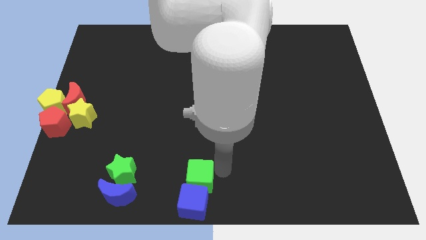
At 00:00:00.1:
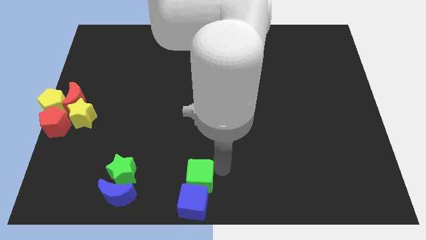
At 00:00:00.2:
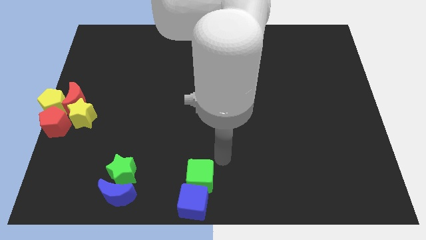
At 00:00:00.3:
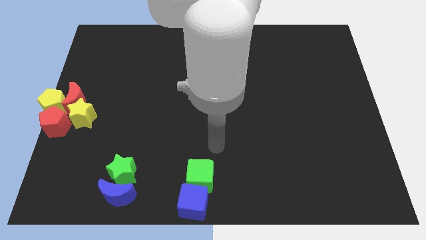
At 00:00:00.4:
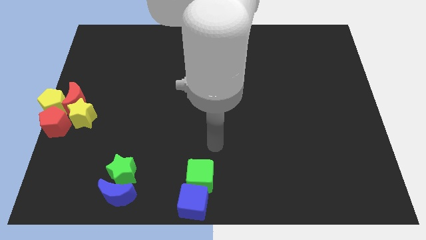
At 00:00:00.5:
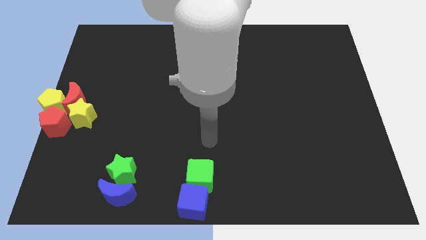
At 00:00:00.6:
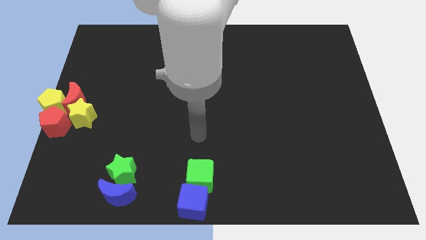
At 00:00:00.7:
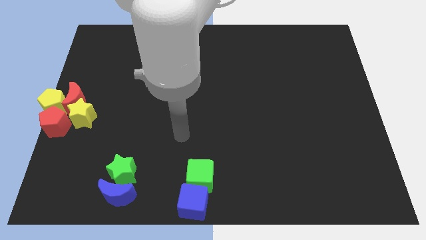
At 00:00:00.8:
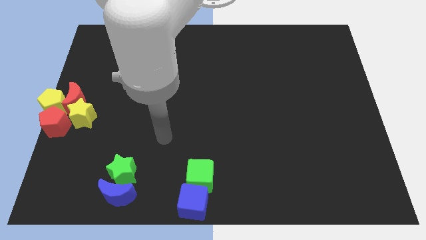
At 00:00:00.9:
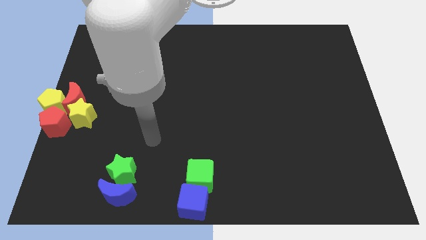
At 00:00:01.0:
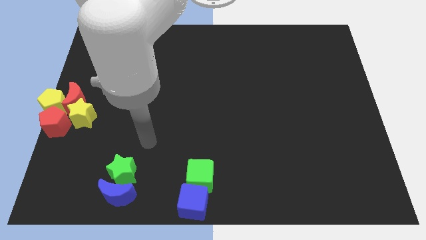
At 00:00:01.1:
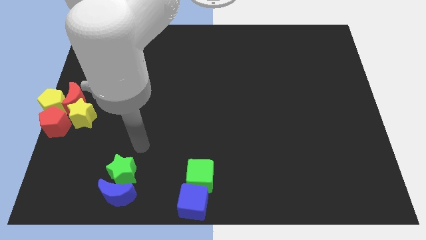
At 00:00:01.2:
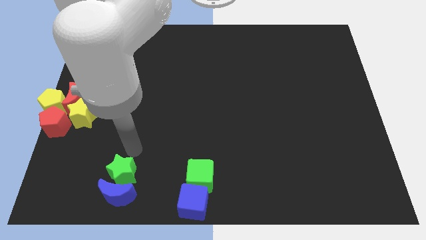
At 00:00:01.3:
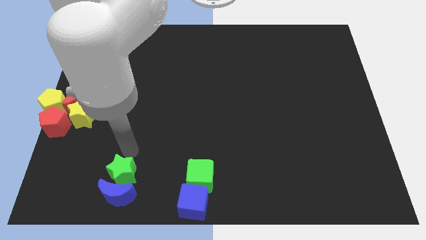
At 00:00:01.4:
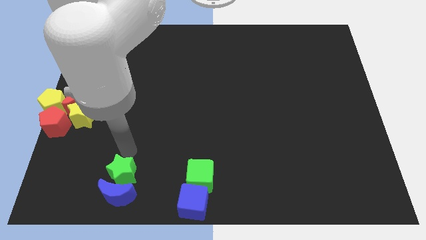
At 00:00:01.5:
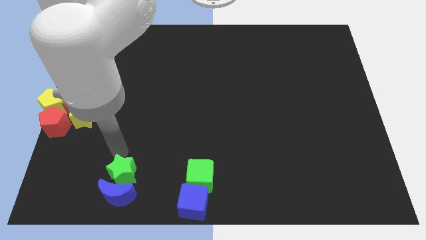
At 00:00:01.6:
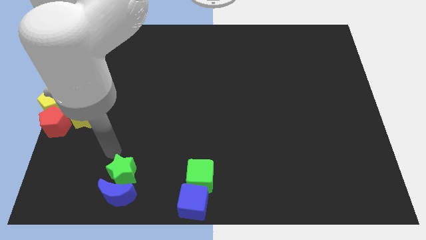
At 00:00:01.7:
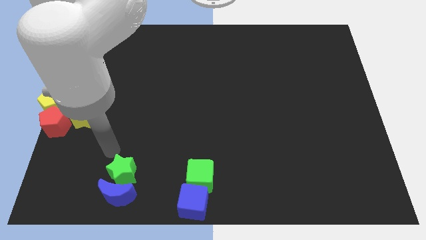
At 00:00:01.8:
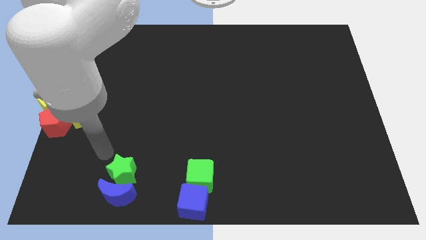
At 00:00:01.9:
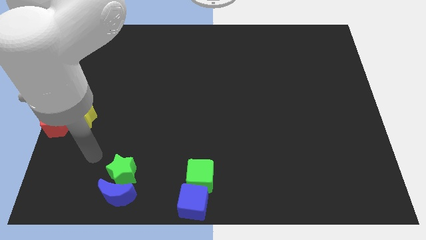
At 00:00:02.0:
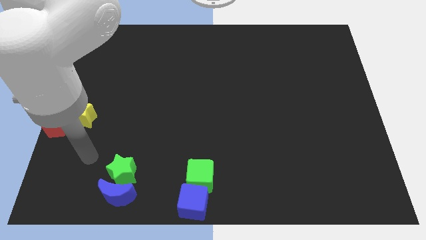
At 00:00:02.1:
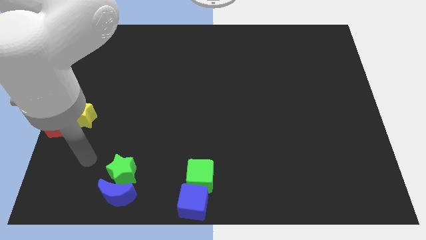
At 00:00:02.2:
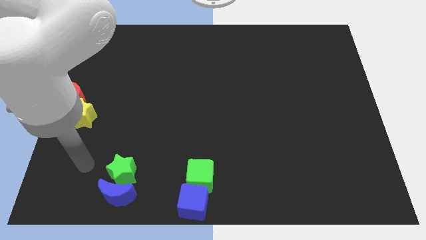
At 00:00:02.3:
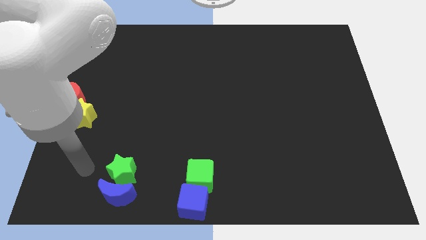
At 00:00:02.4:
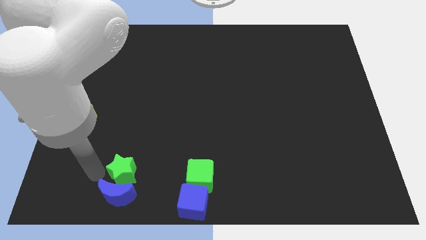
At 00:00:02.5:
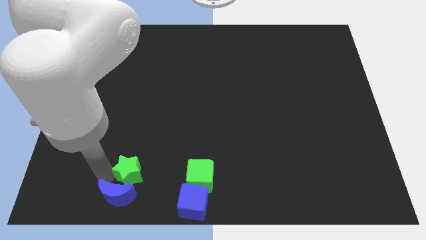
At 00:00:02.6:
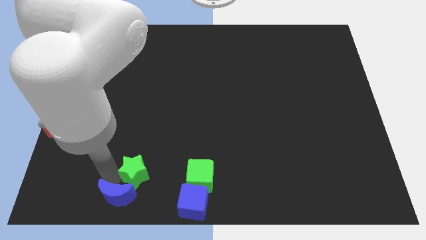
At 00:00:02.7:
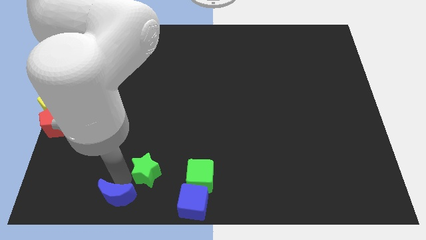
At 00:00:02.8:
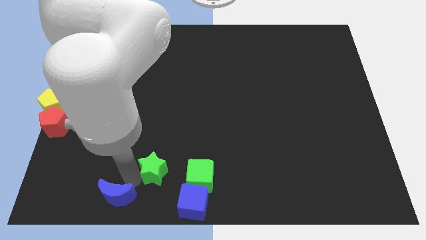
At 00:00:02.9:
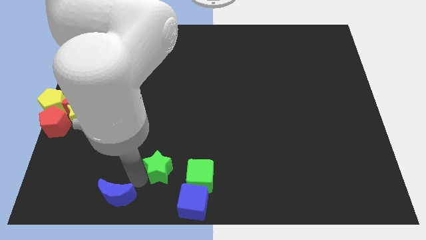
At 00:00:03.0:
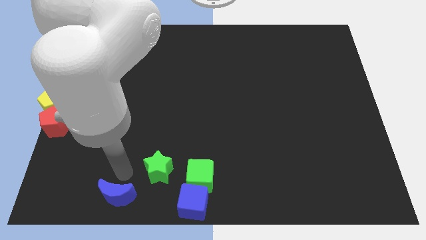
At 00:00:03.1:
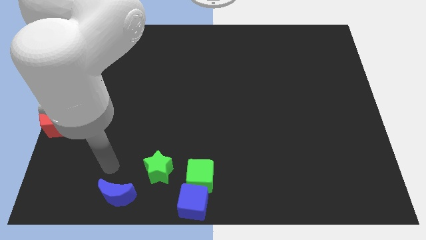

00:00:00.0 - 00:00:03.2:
place the green star at the left side of the green cube

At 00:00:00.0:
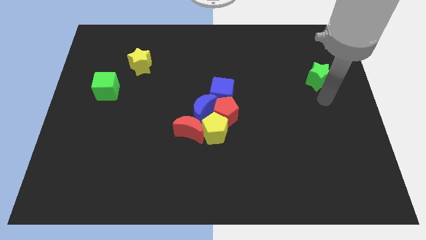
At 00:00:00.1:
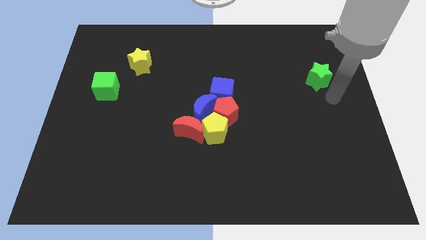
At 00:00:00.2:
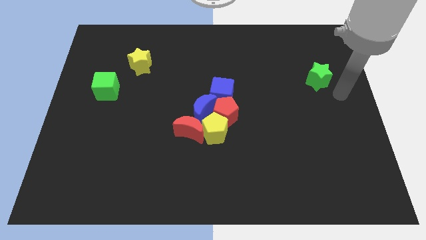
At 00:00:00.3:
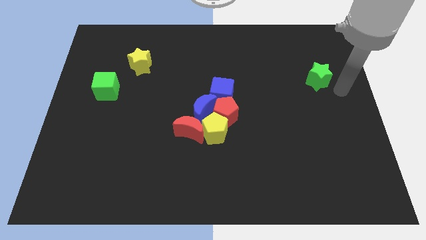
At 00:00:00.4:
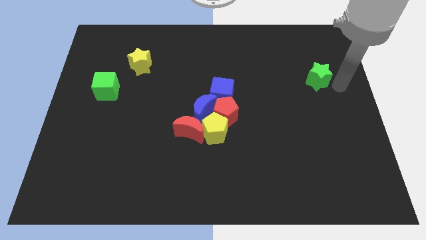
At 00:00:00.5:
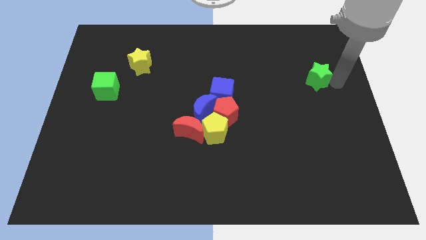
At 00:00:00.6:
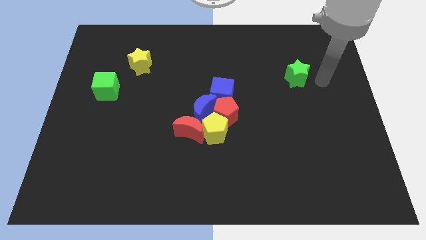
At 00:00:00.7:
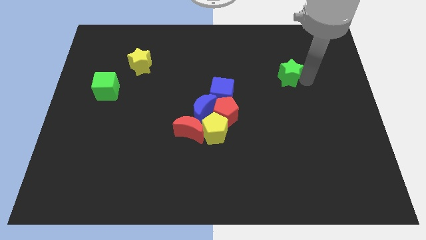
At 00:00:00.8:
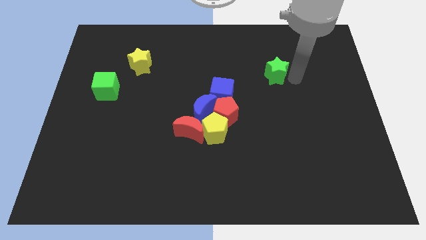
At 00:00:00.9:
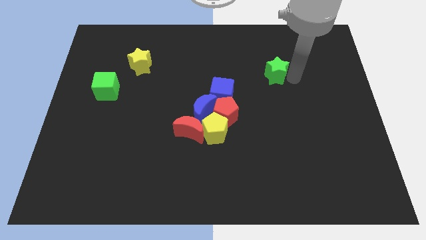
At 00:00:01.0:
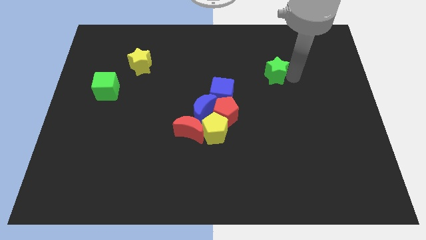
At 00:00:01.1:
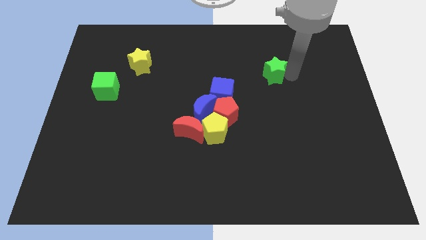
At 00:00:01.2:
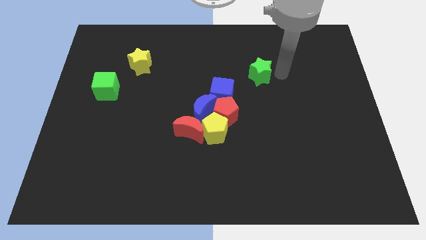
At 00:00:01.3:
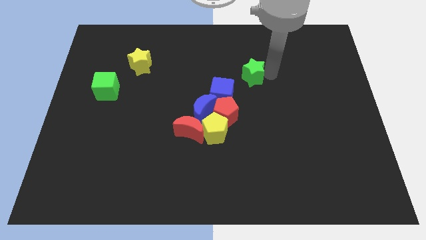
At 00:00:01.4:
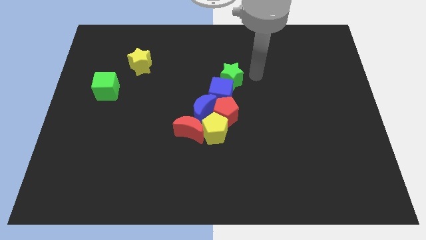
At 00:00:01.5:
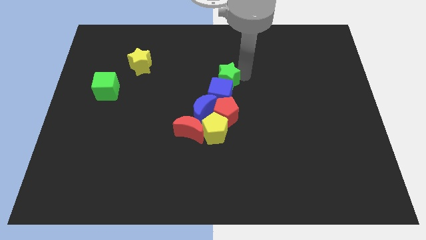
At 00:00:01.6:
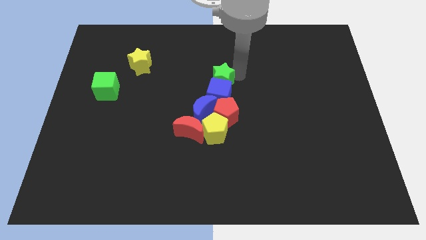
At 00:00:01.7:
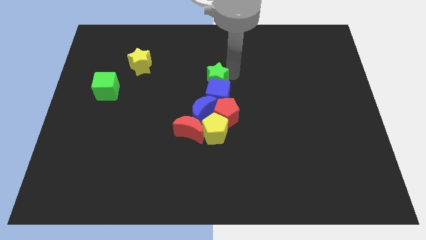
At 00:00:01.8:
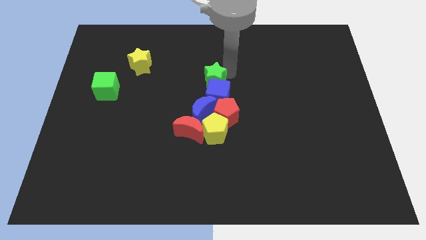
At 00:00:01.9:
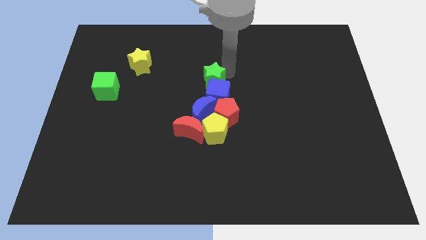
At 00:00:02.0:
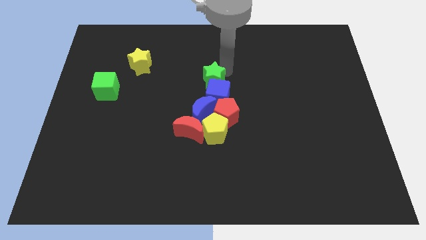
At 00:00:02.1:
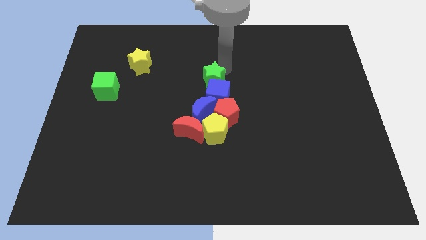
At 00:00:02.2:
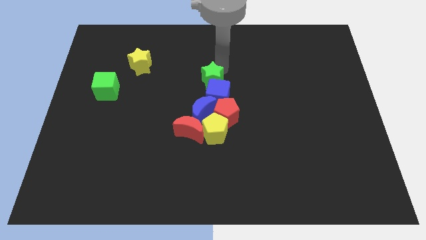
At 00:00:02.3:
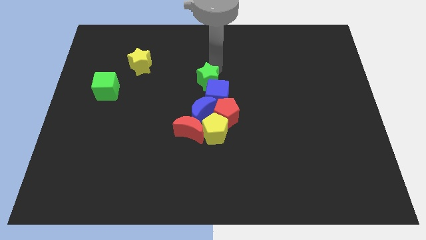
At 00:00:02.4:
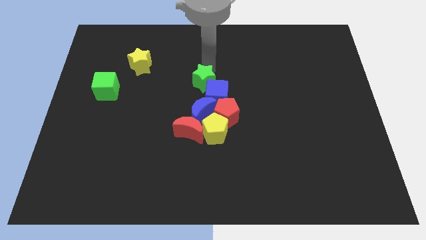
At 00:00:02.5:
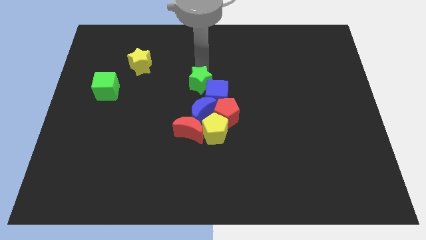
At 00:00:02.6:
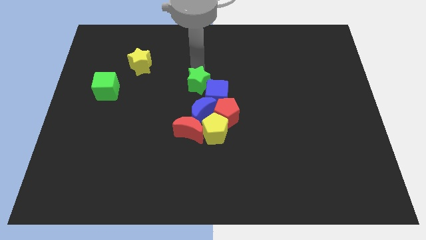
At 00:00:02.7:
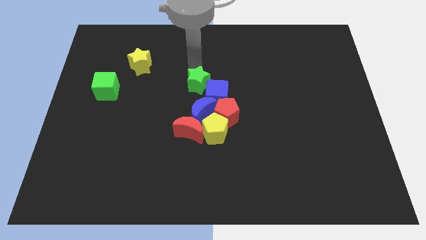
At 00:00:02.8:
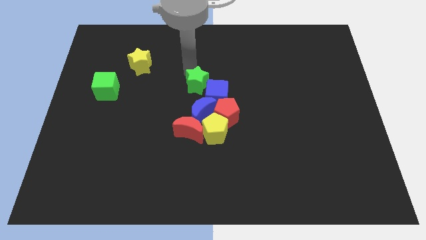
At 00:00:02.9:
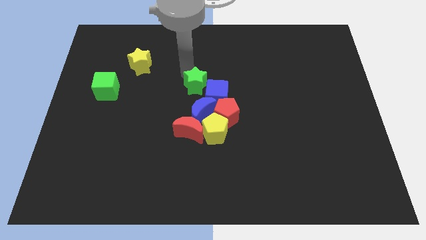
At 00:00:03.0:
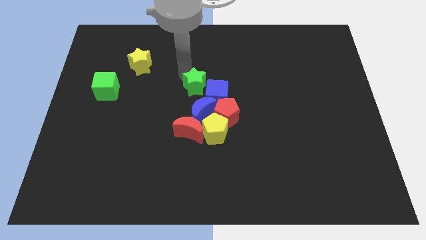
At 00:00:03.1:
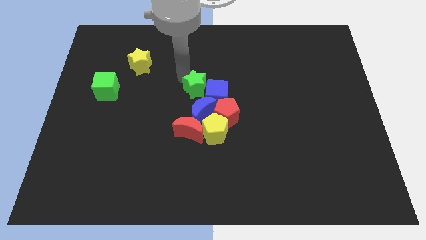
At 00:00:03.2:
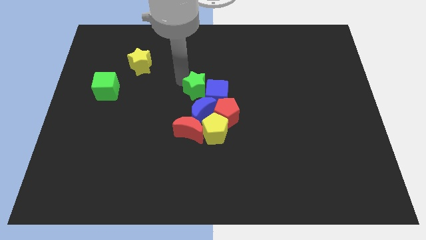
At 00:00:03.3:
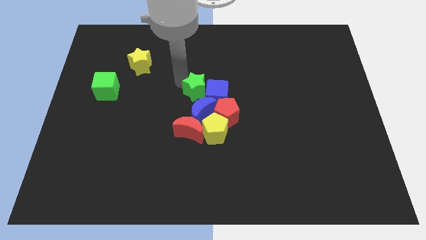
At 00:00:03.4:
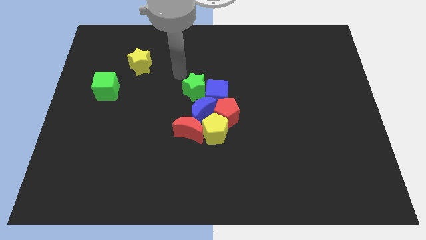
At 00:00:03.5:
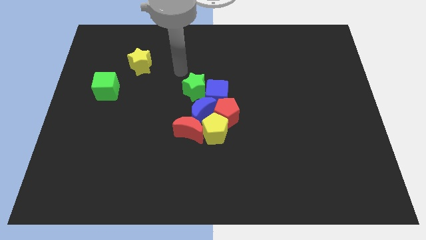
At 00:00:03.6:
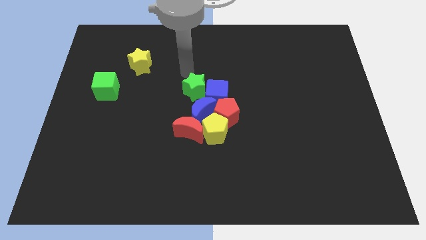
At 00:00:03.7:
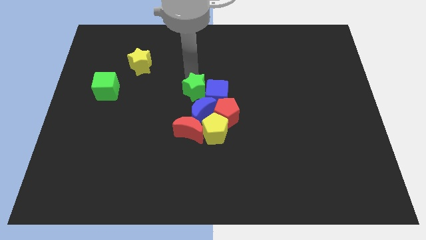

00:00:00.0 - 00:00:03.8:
move green star left beside the blue cube

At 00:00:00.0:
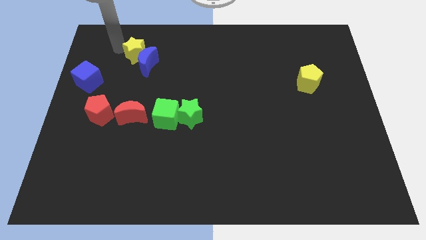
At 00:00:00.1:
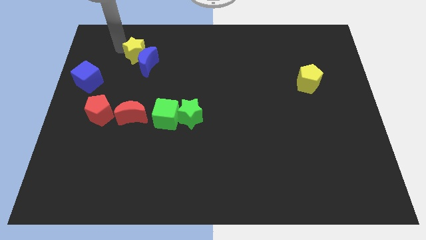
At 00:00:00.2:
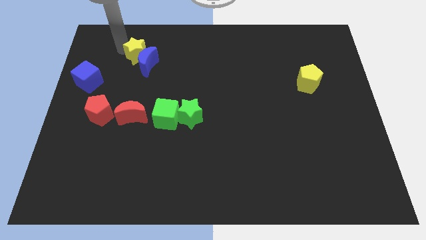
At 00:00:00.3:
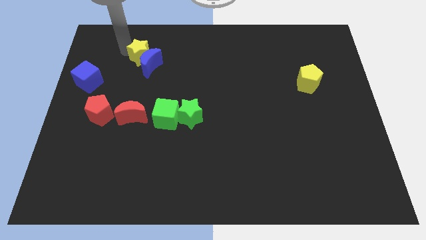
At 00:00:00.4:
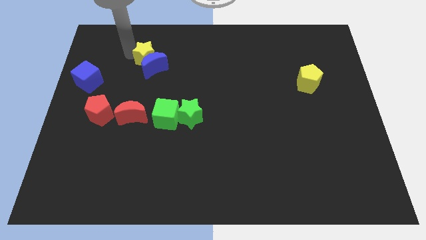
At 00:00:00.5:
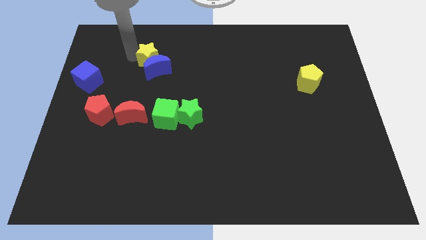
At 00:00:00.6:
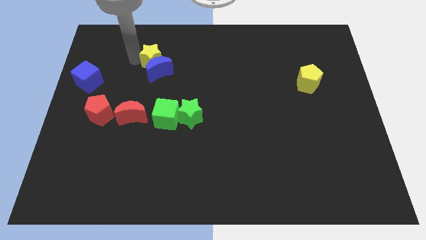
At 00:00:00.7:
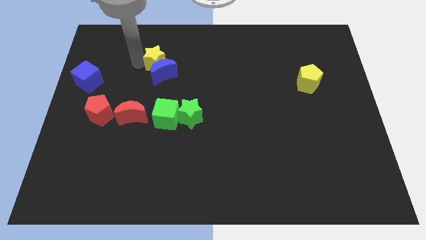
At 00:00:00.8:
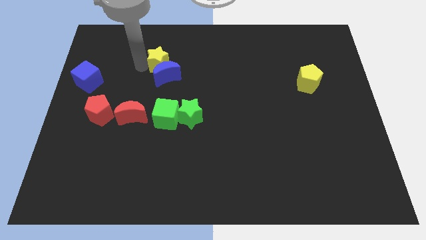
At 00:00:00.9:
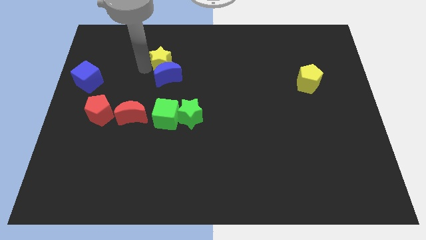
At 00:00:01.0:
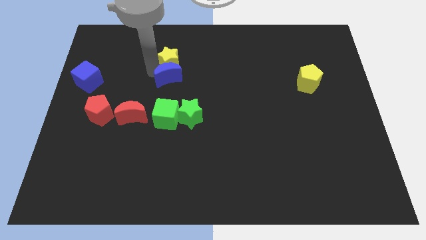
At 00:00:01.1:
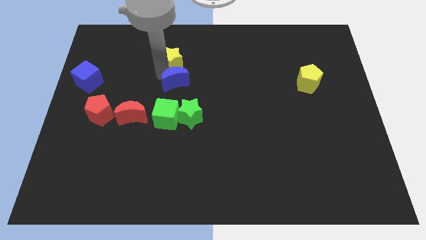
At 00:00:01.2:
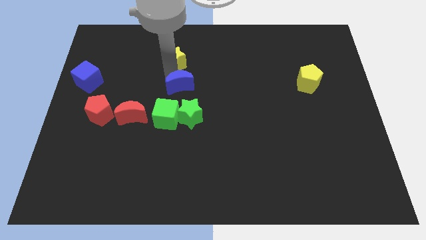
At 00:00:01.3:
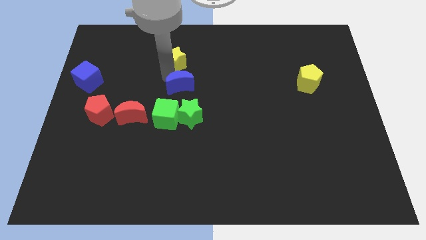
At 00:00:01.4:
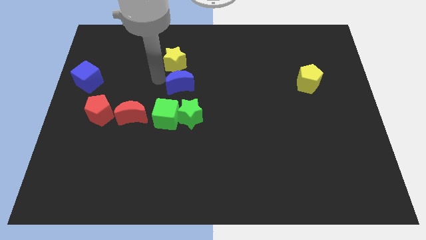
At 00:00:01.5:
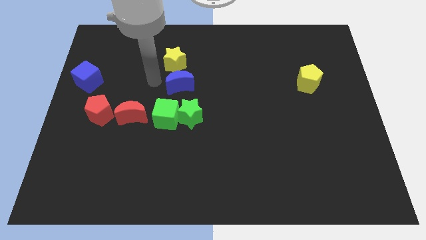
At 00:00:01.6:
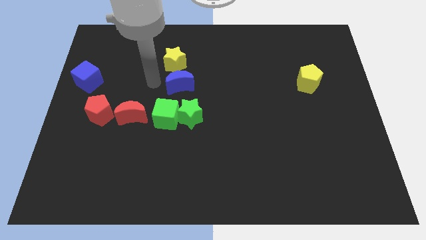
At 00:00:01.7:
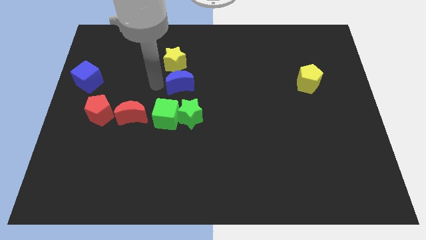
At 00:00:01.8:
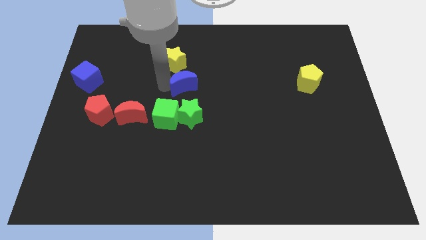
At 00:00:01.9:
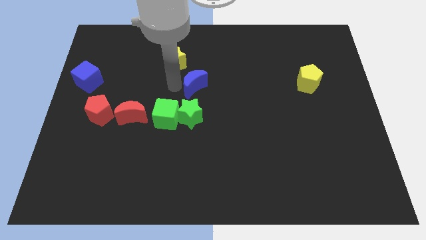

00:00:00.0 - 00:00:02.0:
push blue crescent above green star
